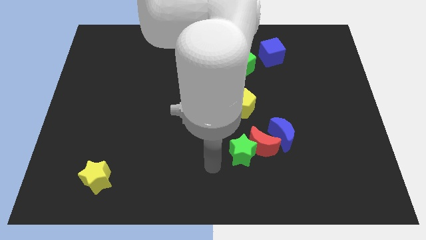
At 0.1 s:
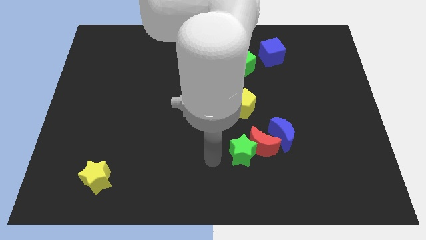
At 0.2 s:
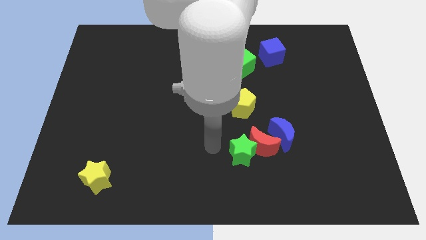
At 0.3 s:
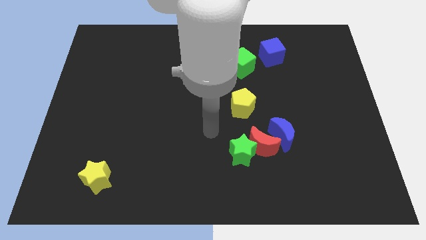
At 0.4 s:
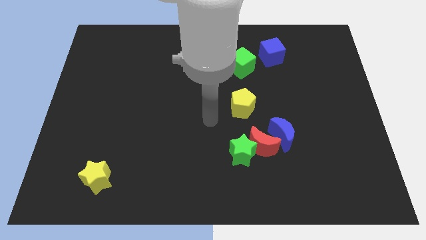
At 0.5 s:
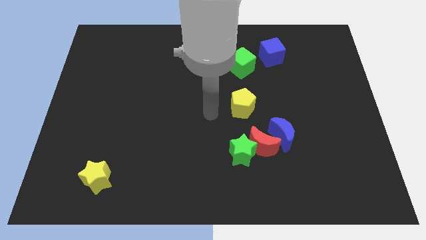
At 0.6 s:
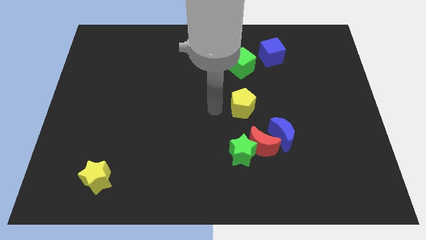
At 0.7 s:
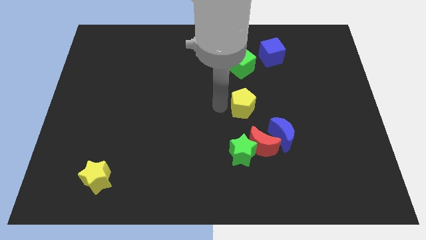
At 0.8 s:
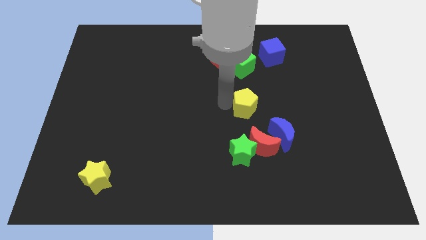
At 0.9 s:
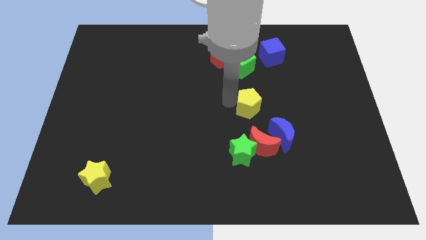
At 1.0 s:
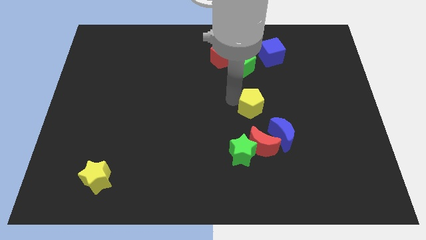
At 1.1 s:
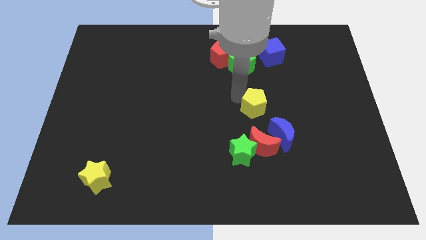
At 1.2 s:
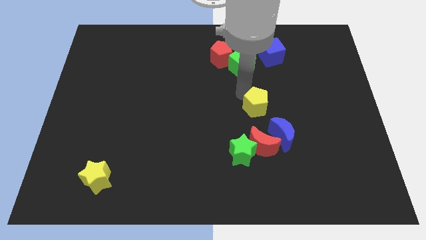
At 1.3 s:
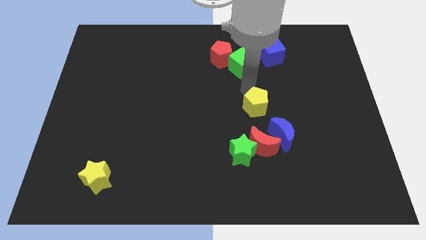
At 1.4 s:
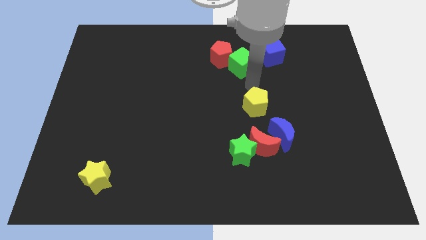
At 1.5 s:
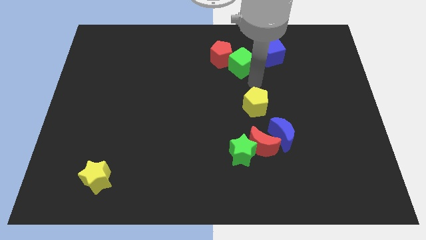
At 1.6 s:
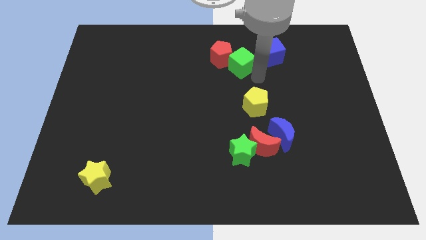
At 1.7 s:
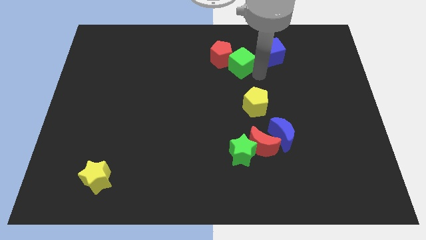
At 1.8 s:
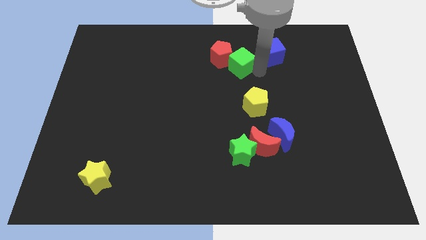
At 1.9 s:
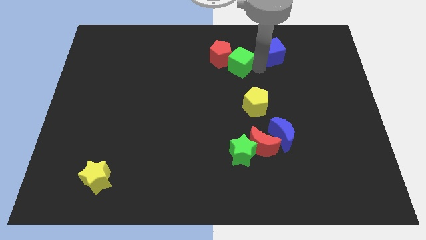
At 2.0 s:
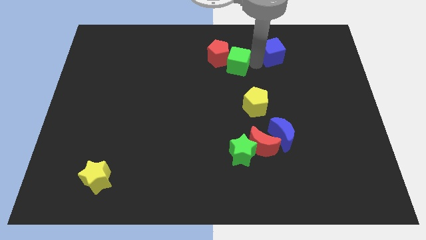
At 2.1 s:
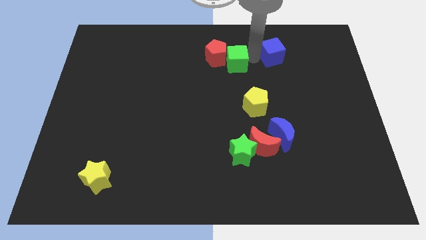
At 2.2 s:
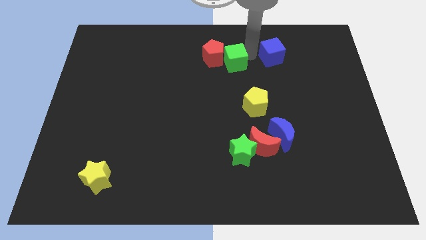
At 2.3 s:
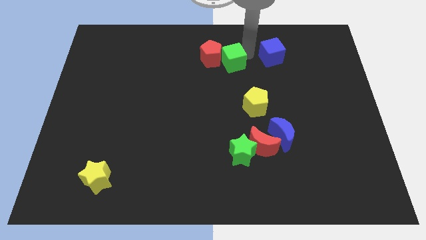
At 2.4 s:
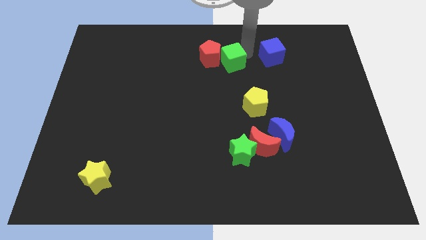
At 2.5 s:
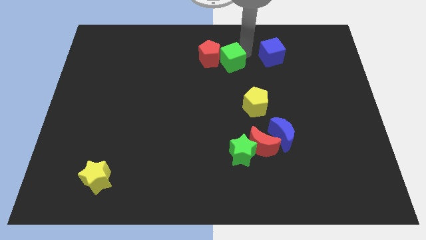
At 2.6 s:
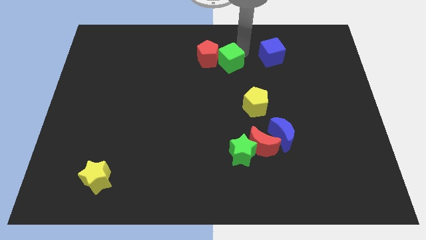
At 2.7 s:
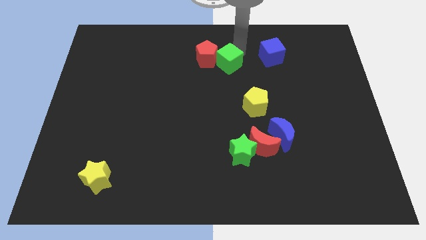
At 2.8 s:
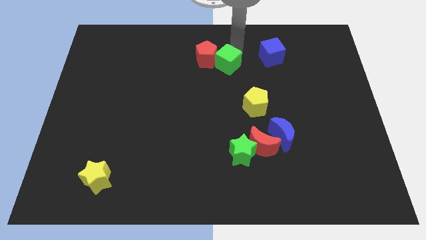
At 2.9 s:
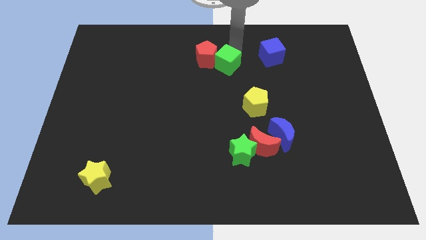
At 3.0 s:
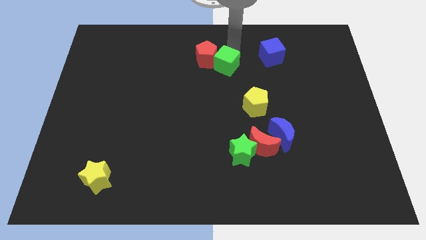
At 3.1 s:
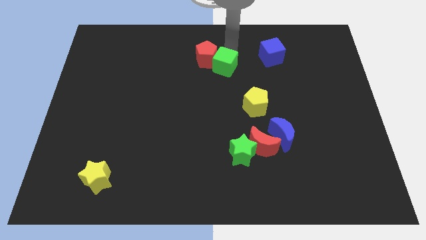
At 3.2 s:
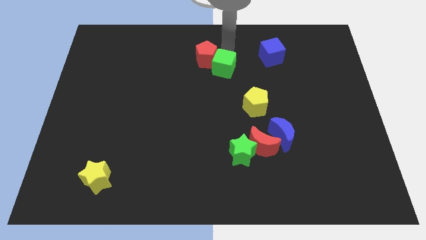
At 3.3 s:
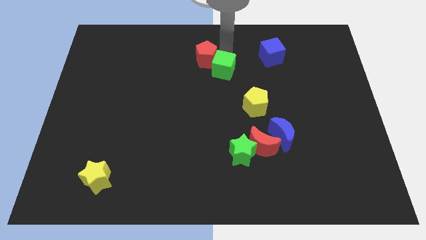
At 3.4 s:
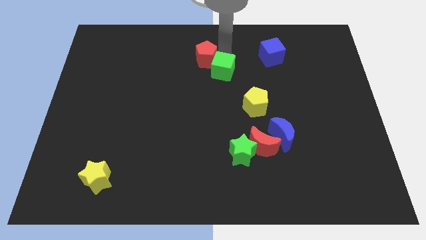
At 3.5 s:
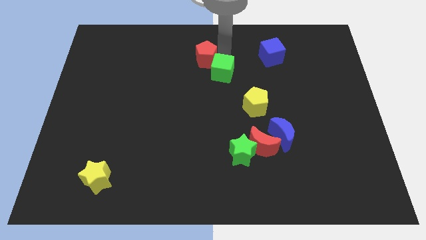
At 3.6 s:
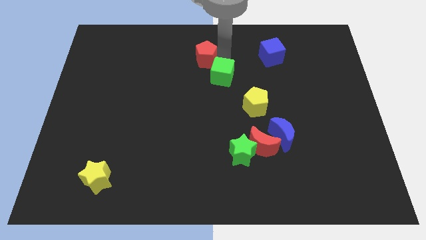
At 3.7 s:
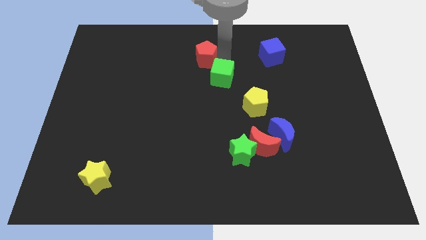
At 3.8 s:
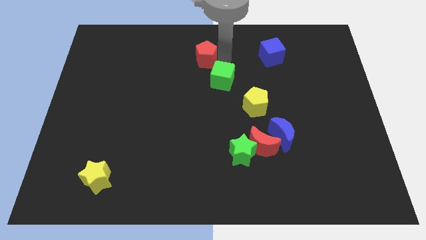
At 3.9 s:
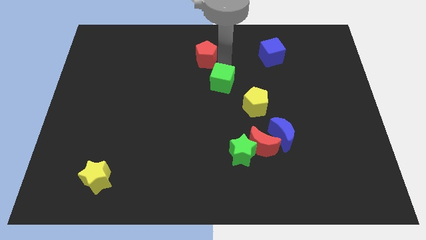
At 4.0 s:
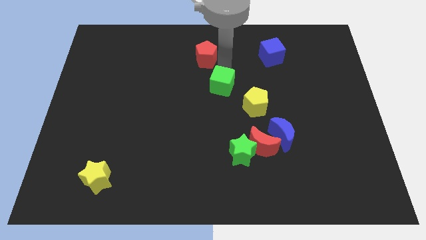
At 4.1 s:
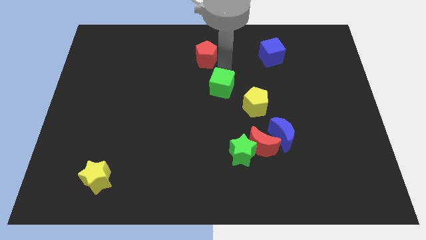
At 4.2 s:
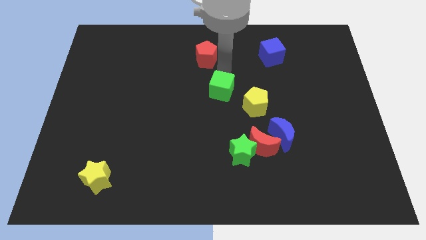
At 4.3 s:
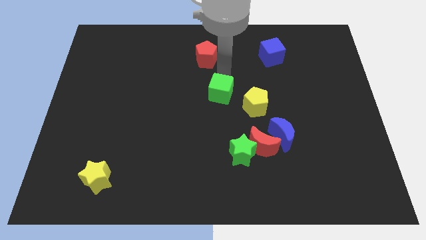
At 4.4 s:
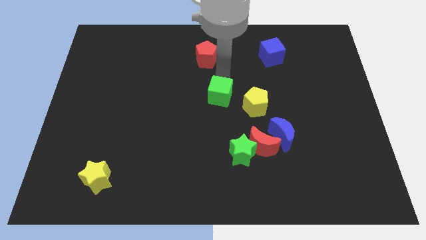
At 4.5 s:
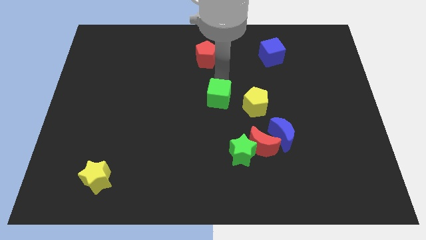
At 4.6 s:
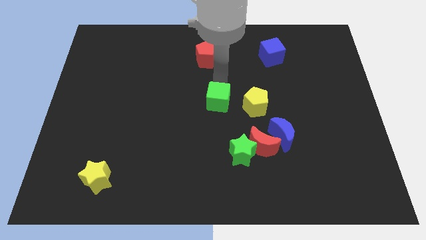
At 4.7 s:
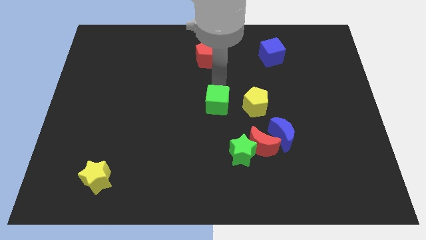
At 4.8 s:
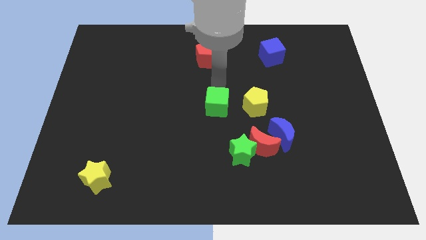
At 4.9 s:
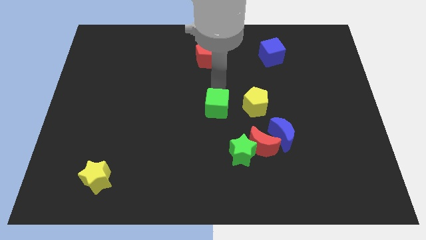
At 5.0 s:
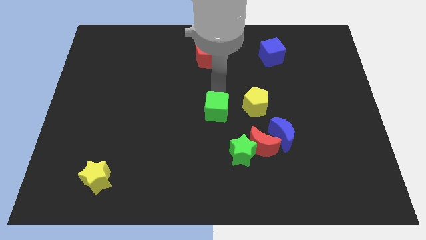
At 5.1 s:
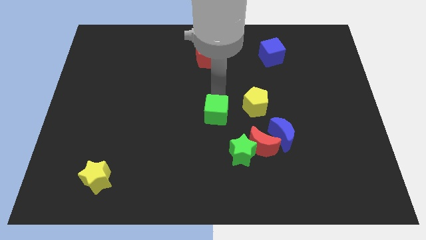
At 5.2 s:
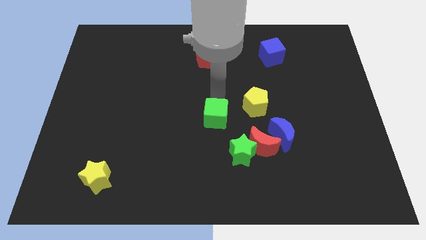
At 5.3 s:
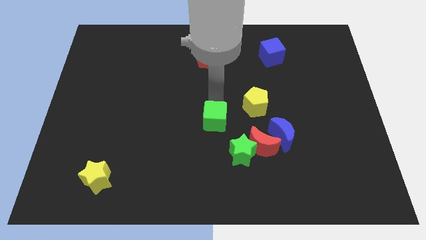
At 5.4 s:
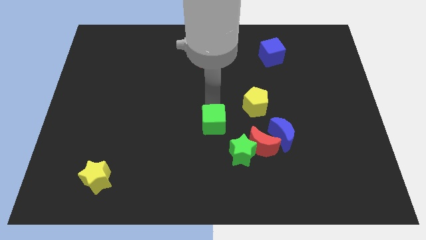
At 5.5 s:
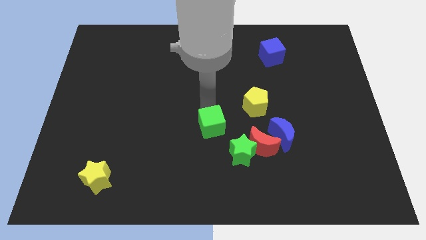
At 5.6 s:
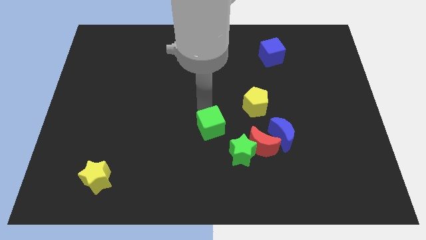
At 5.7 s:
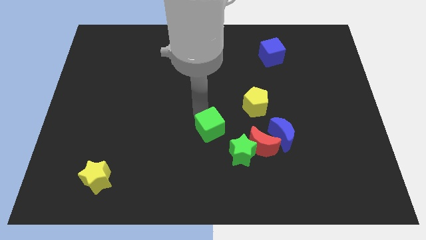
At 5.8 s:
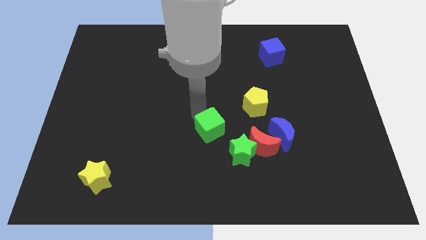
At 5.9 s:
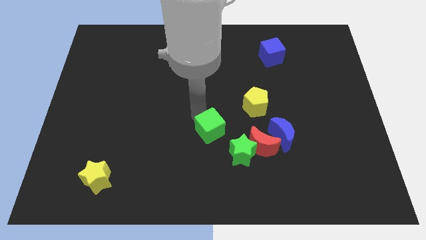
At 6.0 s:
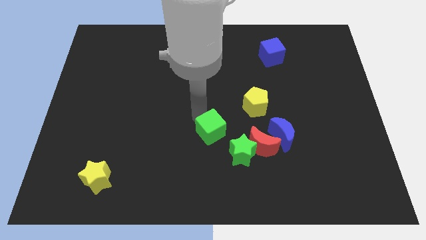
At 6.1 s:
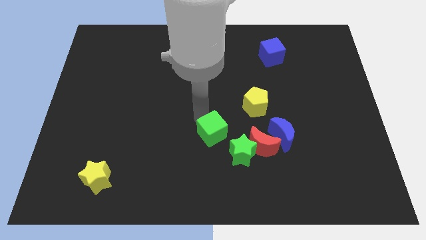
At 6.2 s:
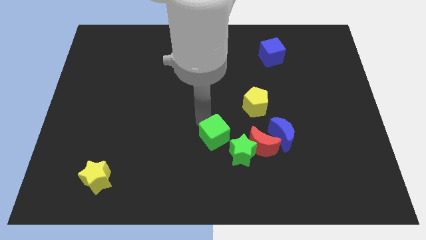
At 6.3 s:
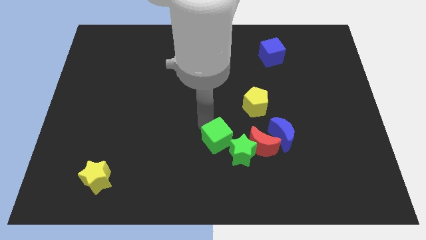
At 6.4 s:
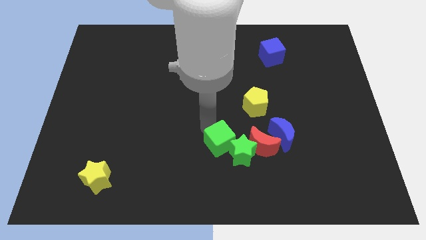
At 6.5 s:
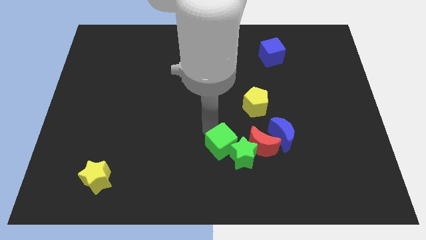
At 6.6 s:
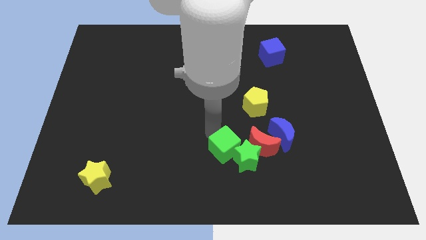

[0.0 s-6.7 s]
slide the green cube next to the green star

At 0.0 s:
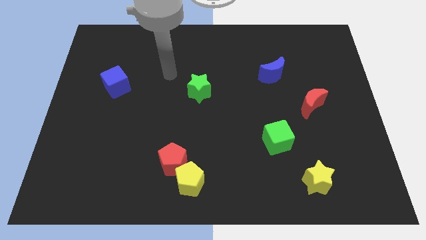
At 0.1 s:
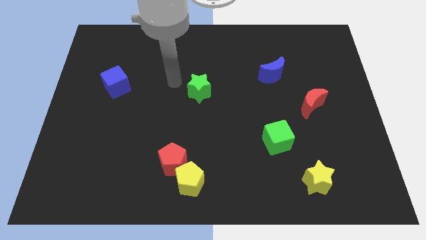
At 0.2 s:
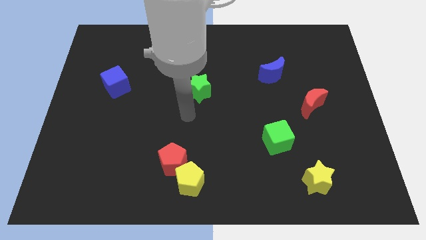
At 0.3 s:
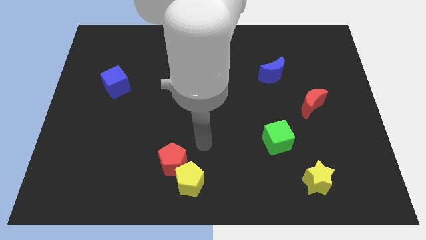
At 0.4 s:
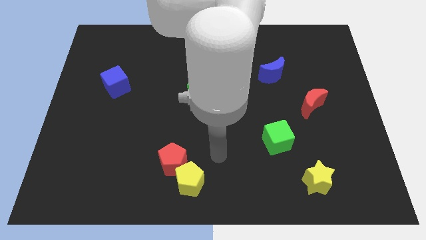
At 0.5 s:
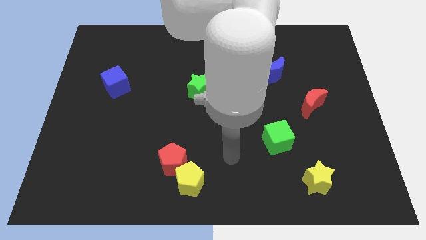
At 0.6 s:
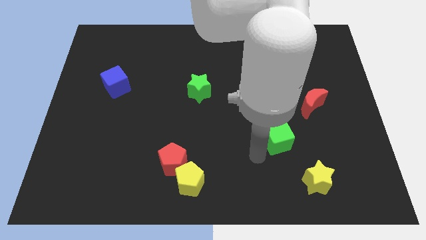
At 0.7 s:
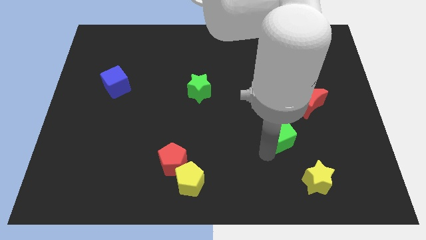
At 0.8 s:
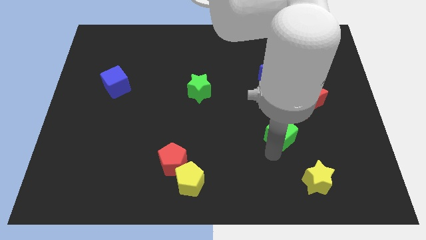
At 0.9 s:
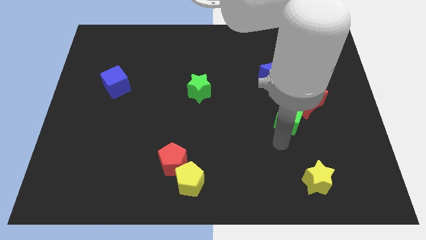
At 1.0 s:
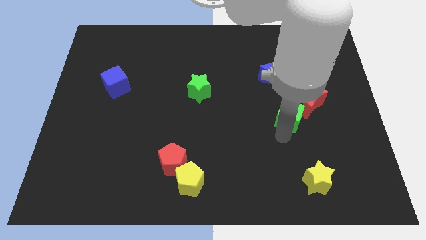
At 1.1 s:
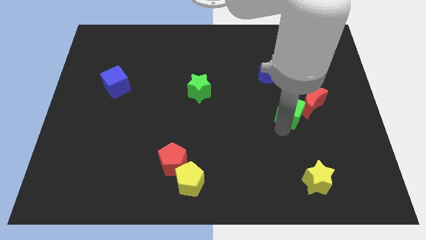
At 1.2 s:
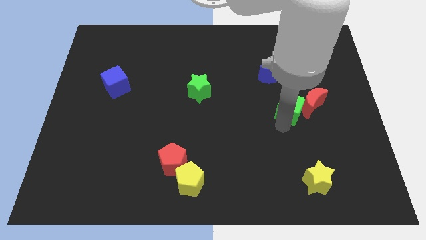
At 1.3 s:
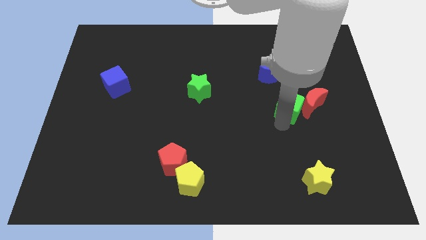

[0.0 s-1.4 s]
put the green cube towards the red moon

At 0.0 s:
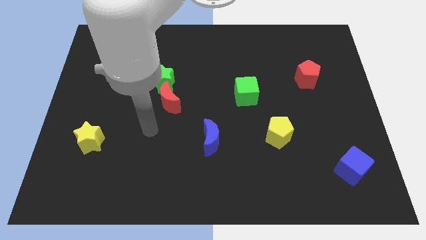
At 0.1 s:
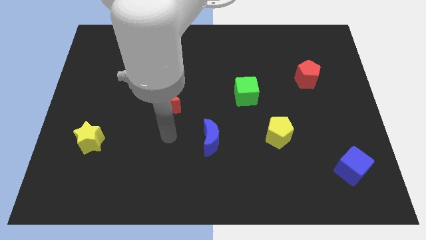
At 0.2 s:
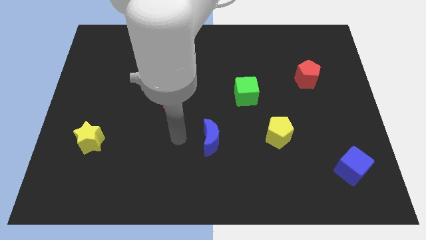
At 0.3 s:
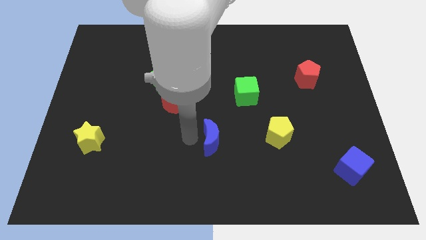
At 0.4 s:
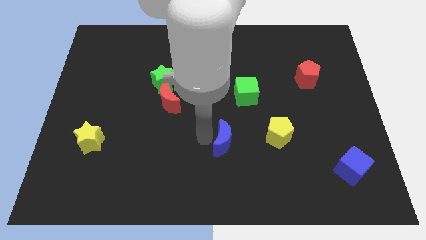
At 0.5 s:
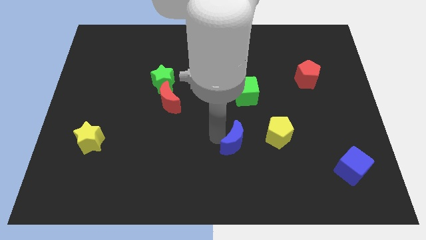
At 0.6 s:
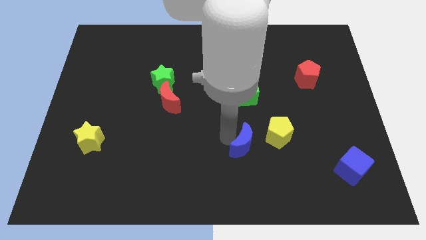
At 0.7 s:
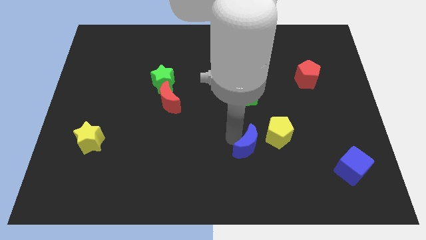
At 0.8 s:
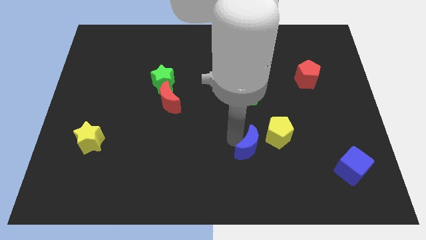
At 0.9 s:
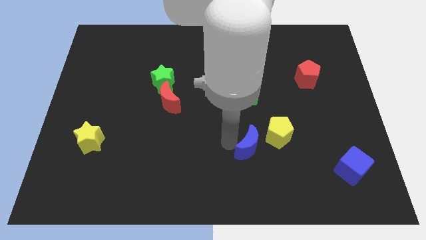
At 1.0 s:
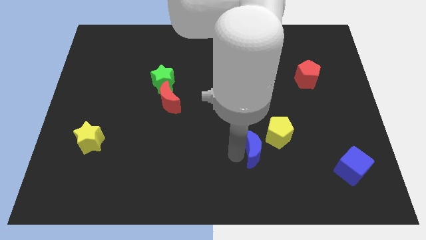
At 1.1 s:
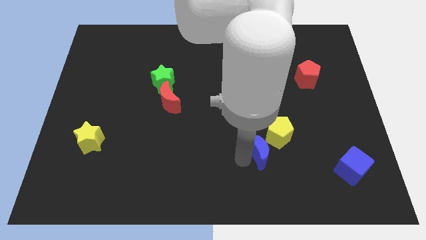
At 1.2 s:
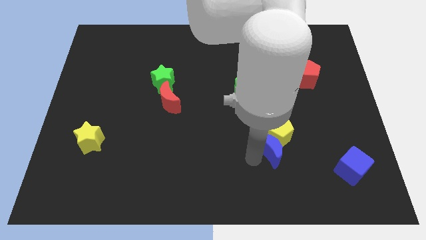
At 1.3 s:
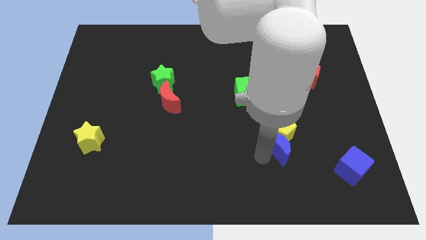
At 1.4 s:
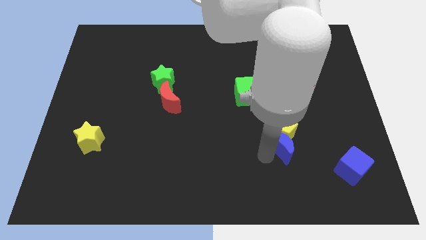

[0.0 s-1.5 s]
push the blue moon to the yellow pentagon
